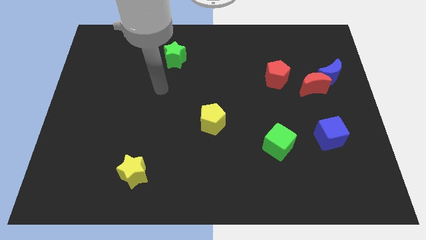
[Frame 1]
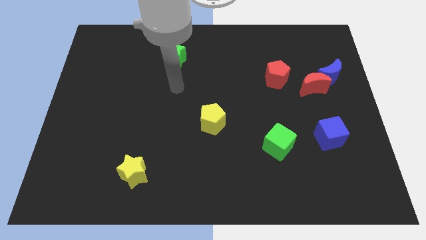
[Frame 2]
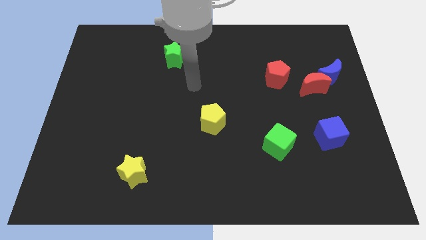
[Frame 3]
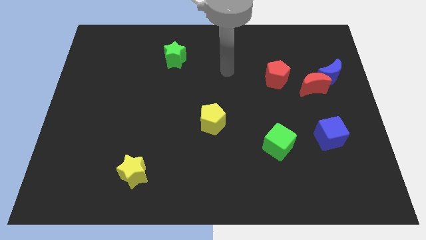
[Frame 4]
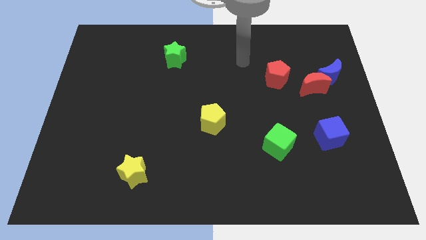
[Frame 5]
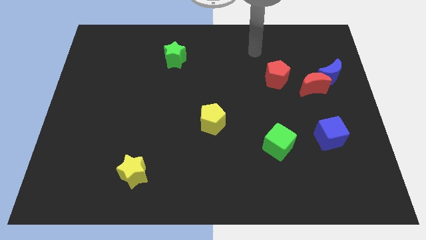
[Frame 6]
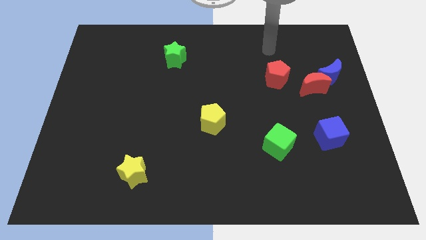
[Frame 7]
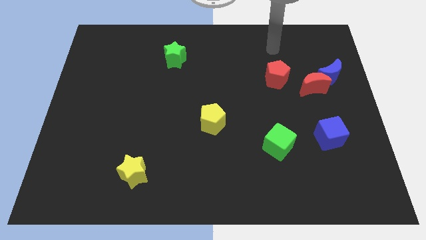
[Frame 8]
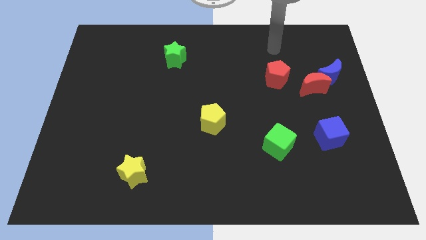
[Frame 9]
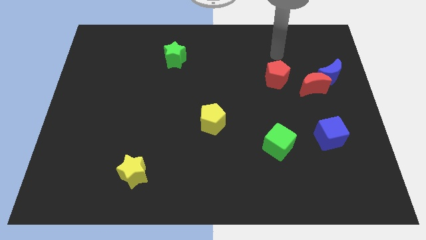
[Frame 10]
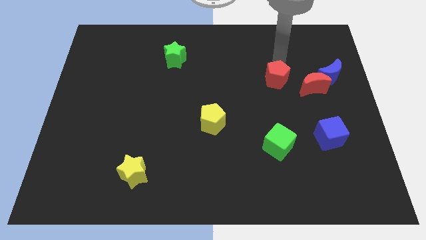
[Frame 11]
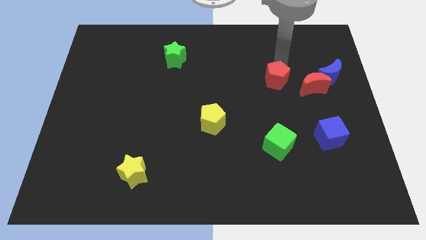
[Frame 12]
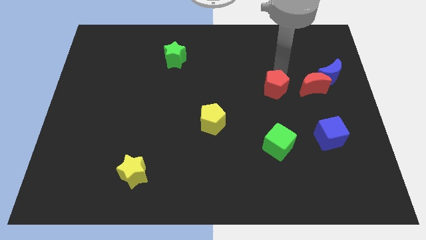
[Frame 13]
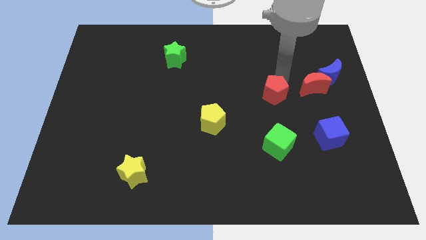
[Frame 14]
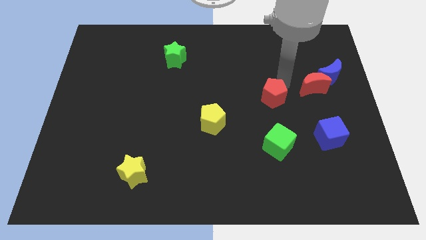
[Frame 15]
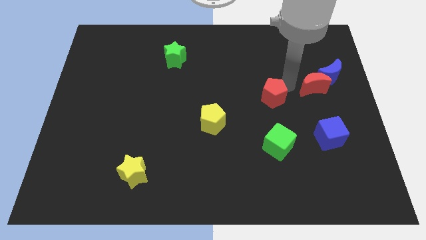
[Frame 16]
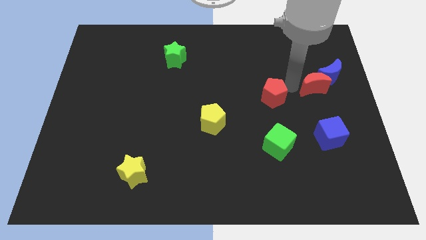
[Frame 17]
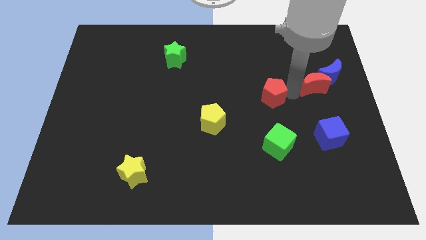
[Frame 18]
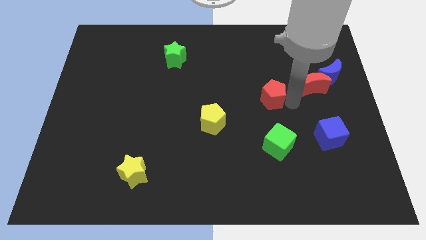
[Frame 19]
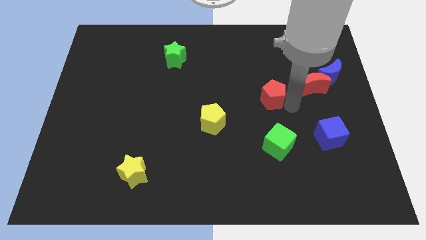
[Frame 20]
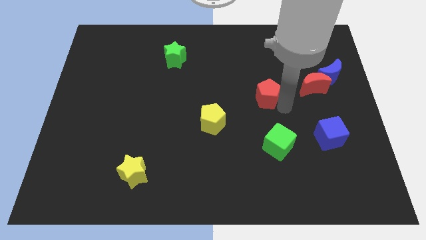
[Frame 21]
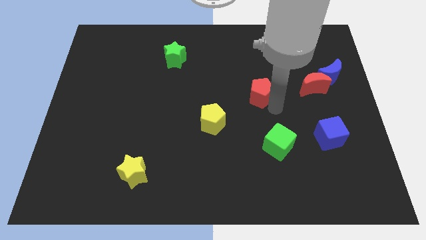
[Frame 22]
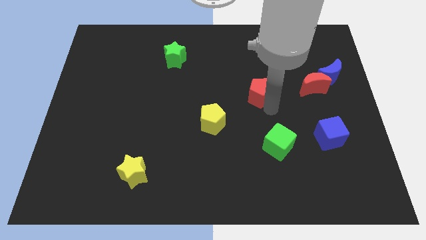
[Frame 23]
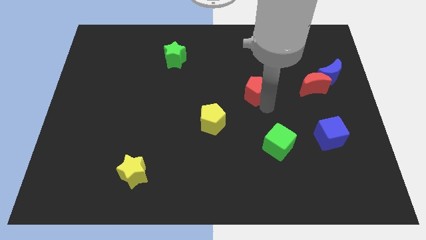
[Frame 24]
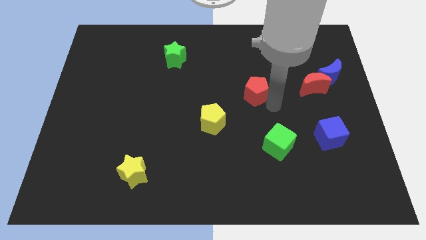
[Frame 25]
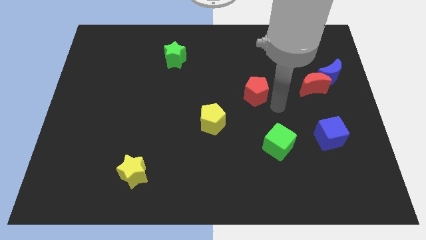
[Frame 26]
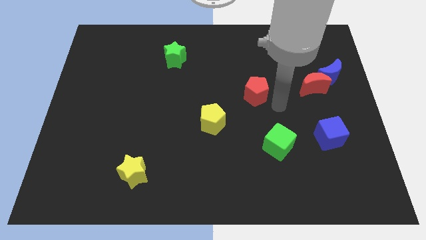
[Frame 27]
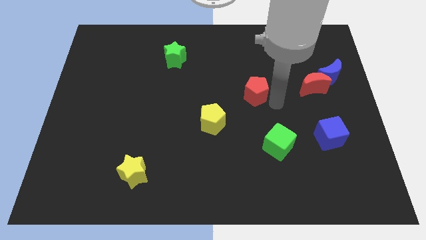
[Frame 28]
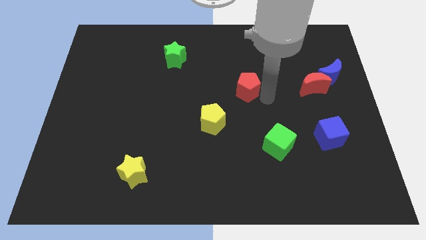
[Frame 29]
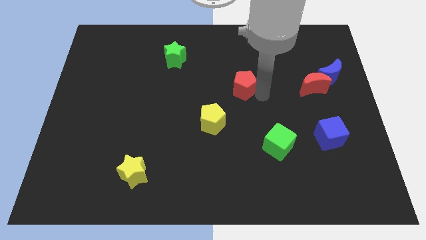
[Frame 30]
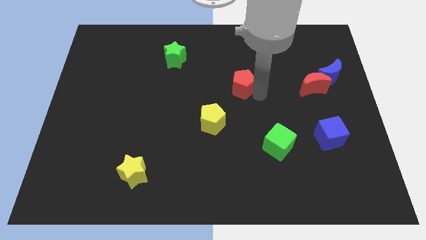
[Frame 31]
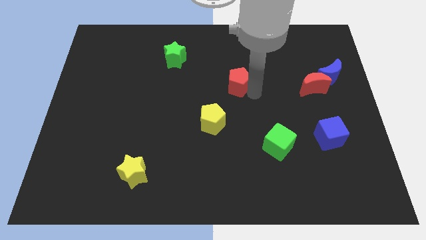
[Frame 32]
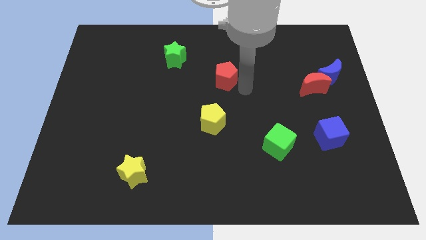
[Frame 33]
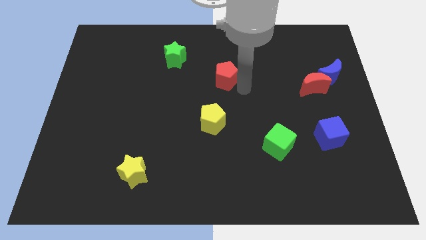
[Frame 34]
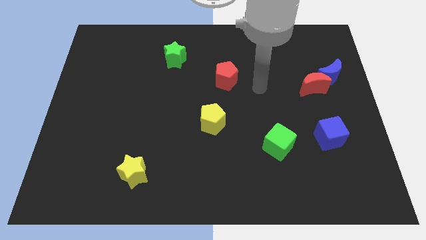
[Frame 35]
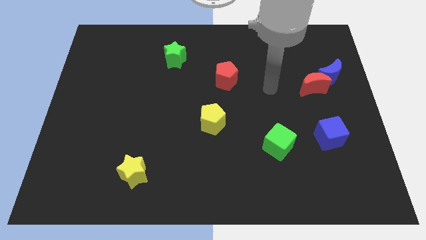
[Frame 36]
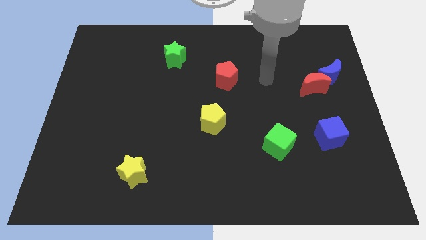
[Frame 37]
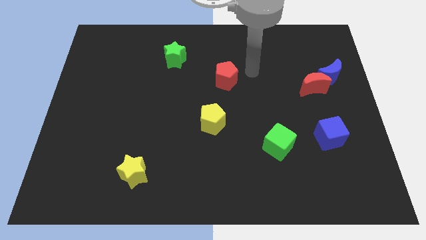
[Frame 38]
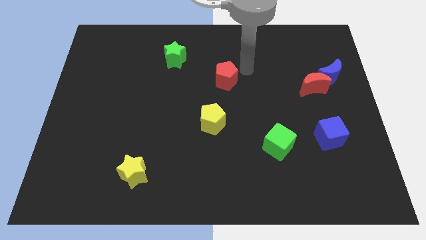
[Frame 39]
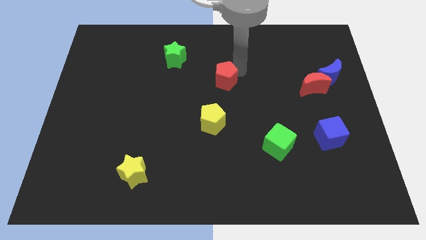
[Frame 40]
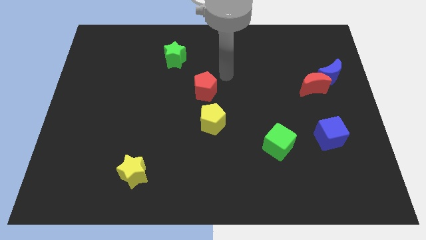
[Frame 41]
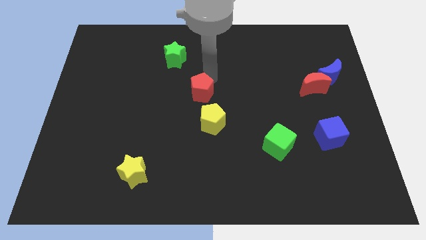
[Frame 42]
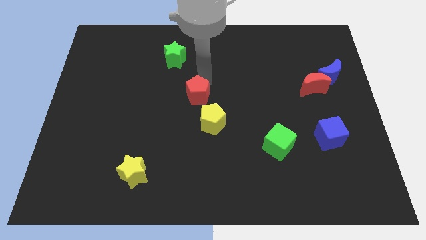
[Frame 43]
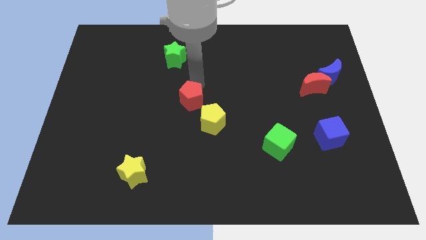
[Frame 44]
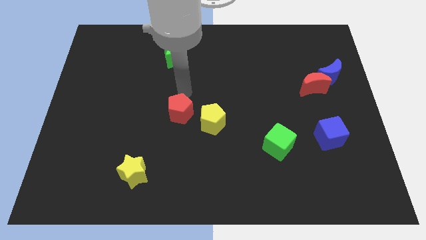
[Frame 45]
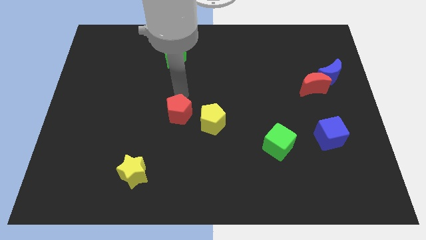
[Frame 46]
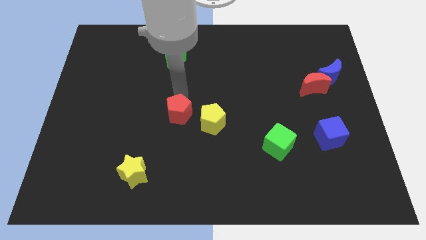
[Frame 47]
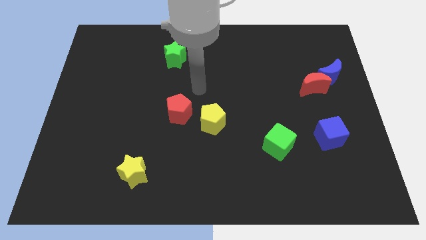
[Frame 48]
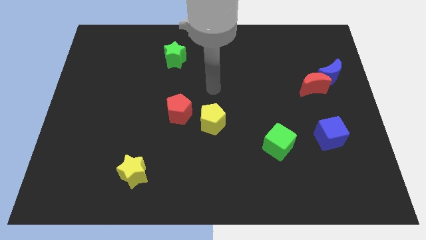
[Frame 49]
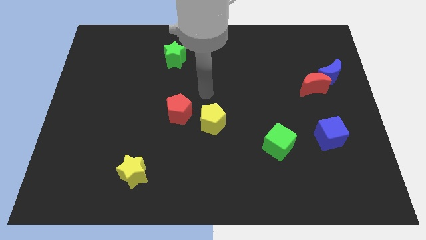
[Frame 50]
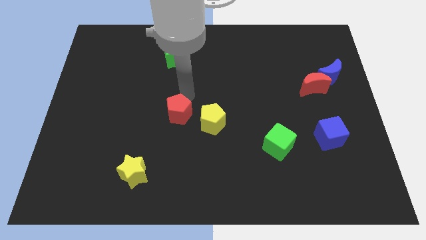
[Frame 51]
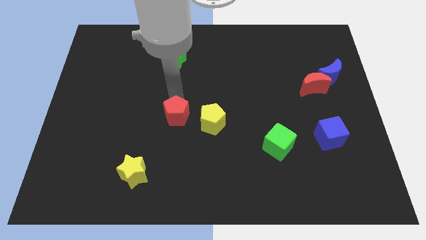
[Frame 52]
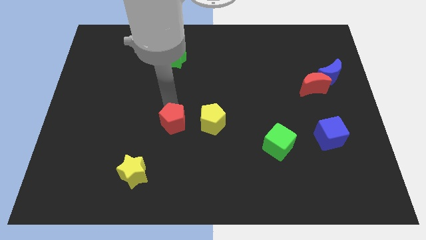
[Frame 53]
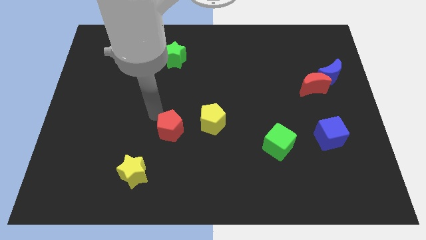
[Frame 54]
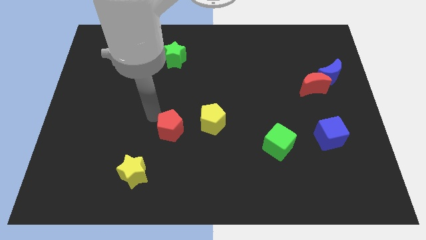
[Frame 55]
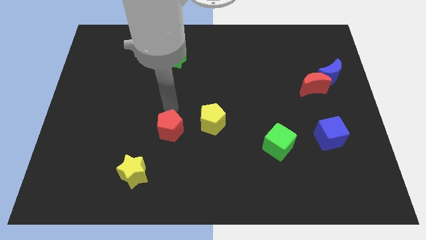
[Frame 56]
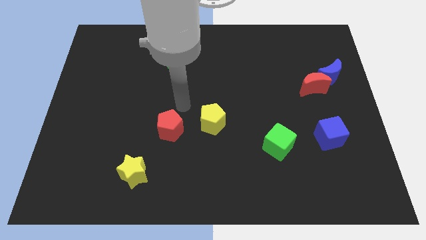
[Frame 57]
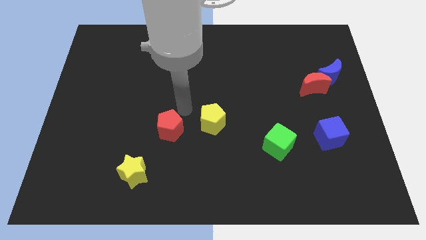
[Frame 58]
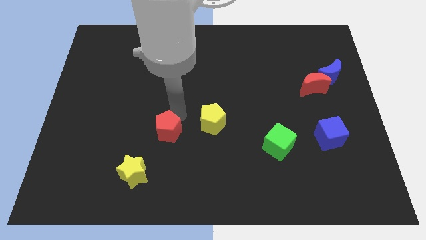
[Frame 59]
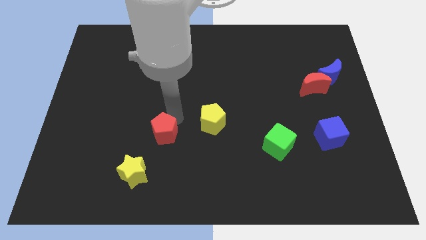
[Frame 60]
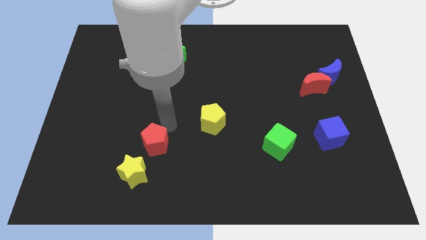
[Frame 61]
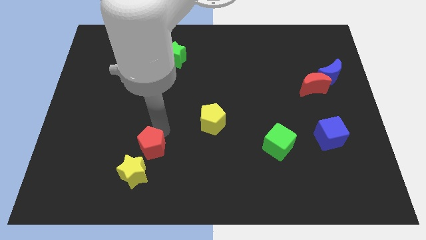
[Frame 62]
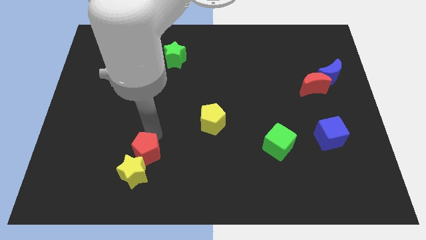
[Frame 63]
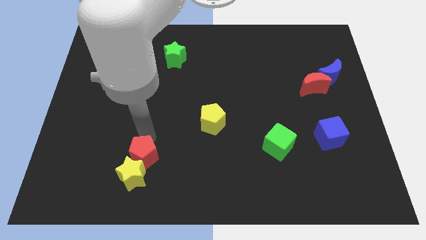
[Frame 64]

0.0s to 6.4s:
move the red pentagon next to the yellow star

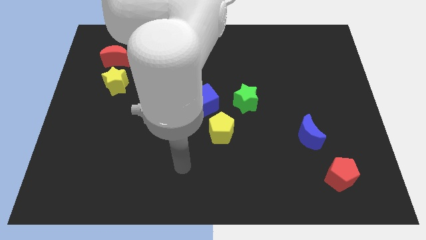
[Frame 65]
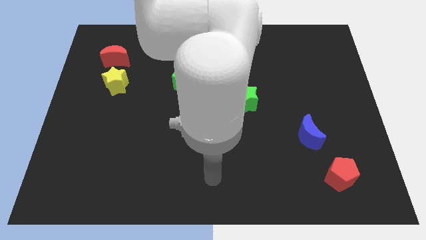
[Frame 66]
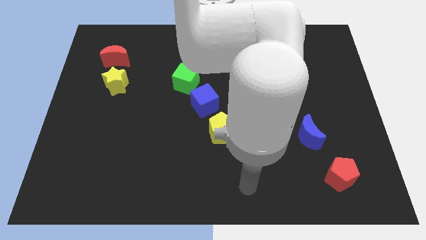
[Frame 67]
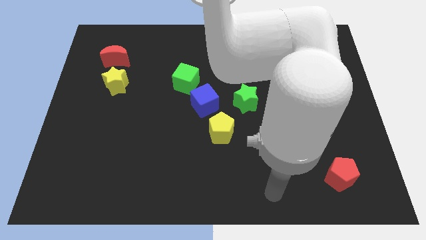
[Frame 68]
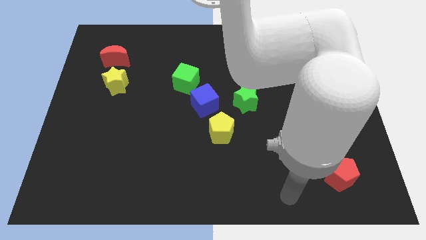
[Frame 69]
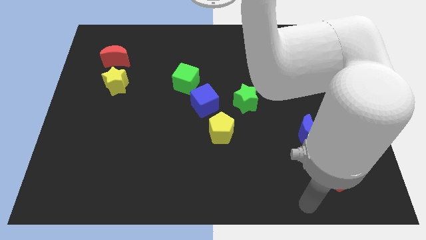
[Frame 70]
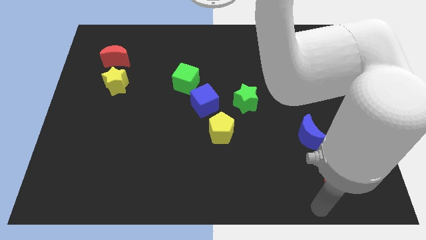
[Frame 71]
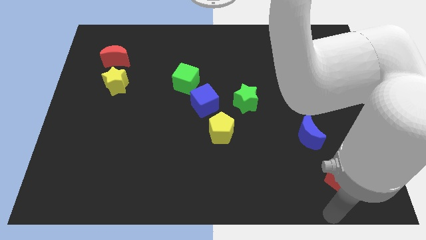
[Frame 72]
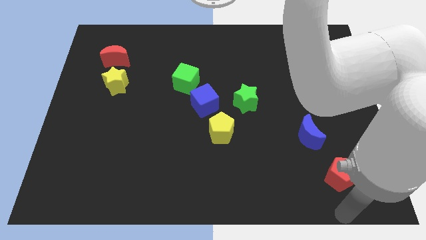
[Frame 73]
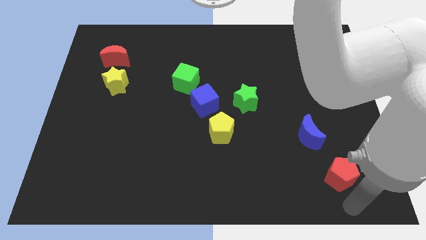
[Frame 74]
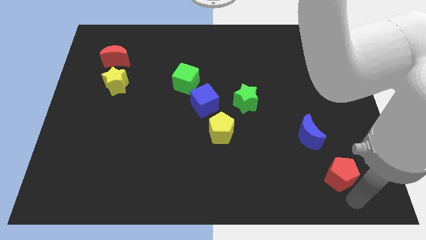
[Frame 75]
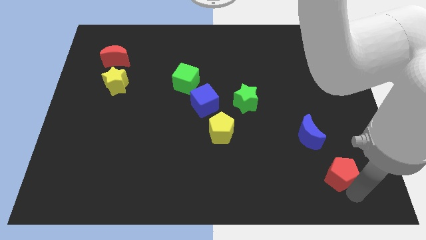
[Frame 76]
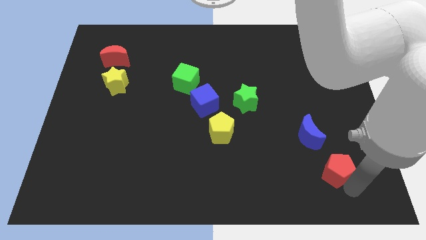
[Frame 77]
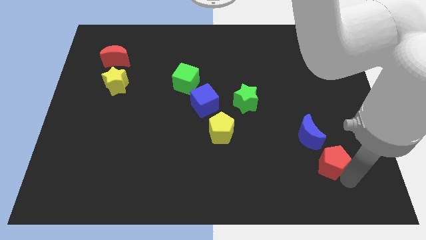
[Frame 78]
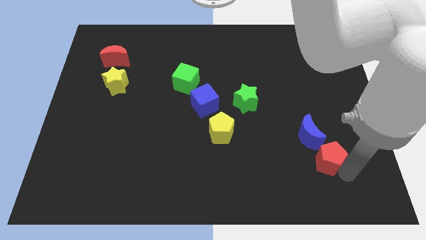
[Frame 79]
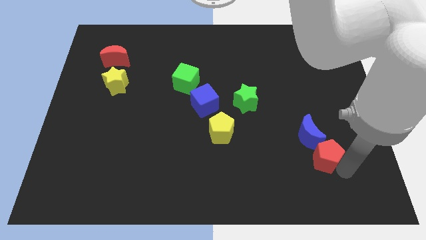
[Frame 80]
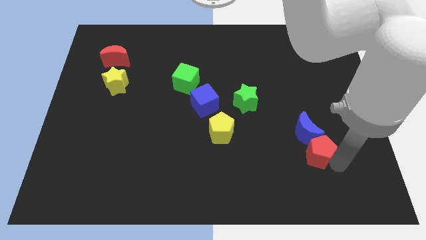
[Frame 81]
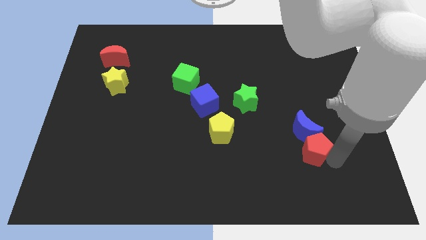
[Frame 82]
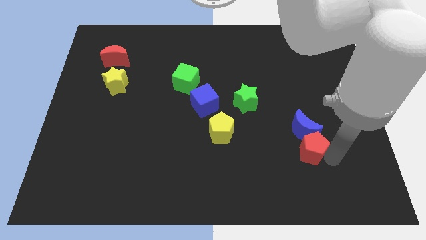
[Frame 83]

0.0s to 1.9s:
move the red pentagon towards the blue moon
